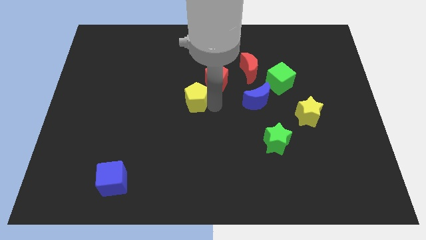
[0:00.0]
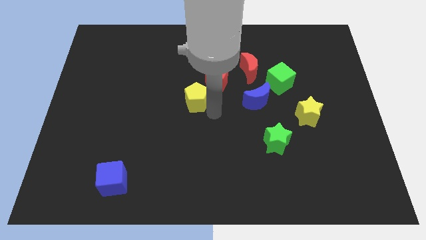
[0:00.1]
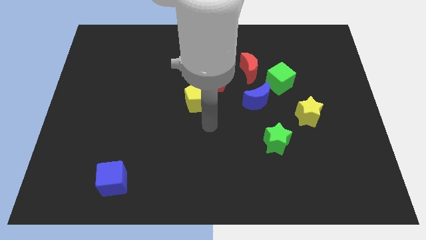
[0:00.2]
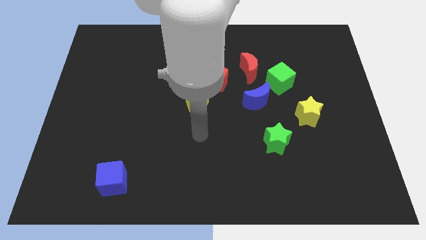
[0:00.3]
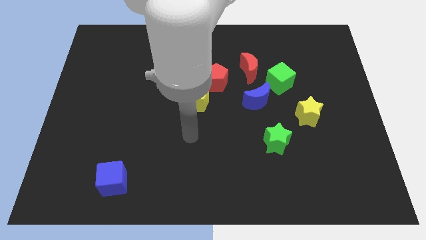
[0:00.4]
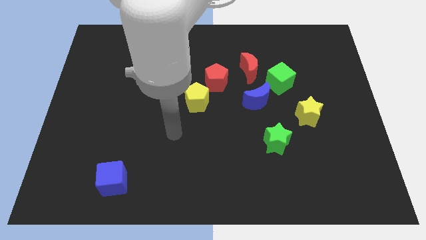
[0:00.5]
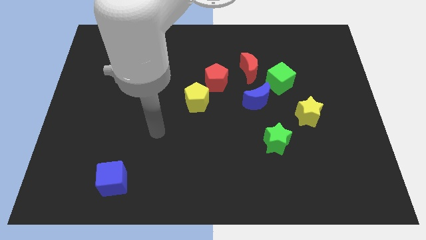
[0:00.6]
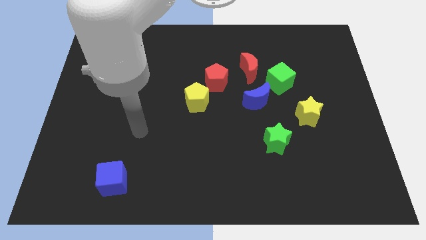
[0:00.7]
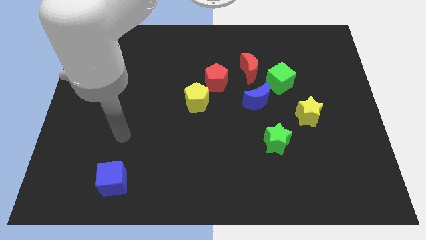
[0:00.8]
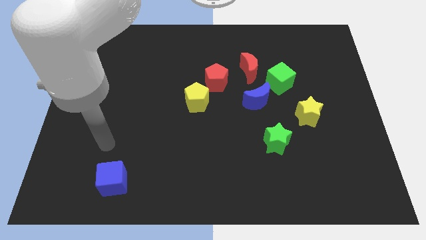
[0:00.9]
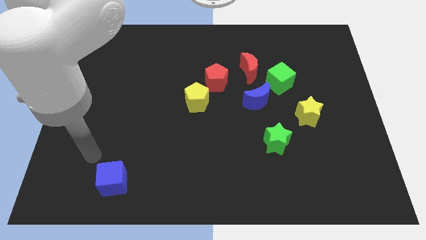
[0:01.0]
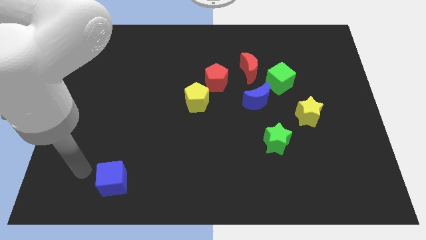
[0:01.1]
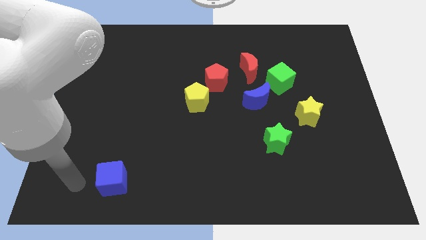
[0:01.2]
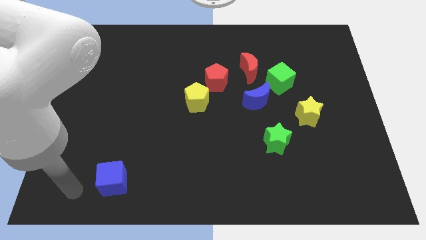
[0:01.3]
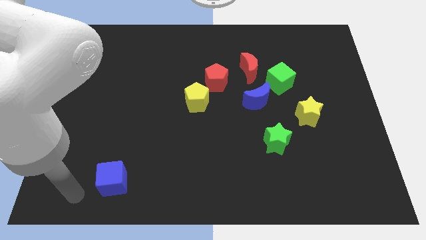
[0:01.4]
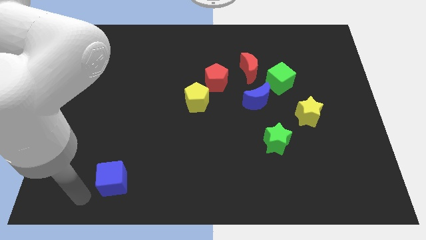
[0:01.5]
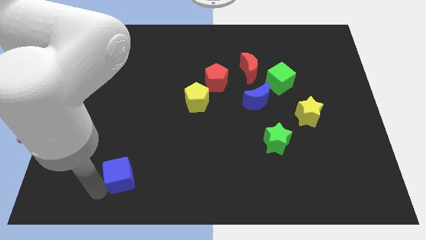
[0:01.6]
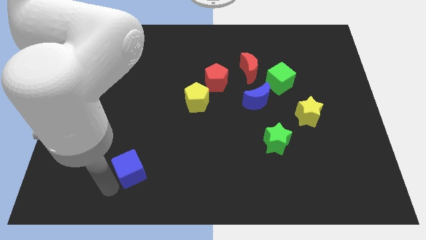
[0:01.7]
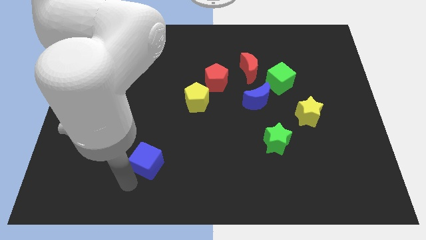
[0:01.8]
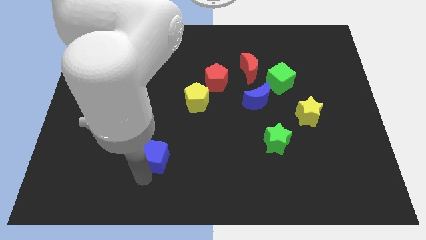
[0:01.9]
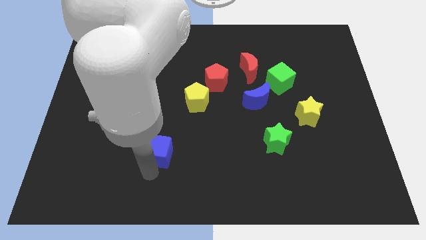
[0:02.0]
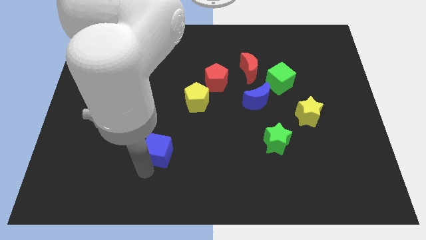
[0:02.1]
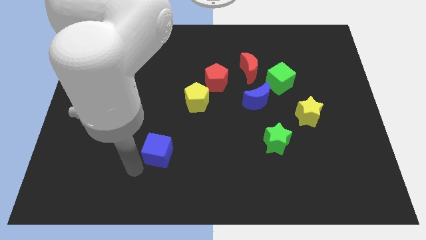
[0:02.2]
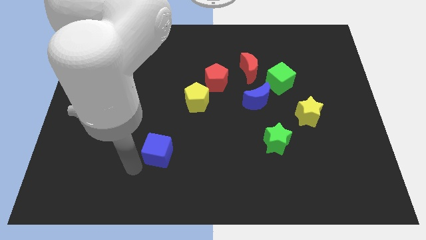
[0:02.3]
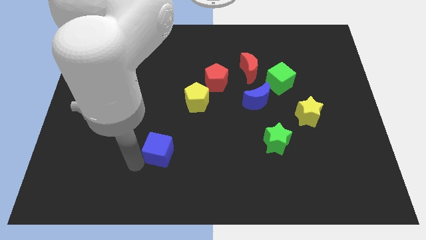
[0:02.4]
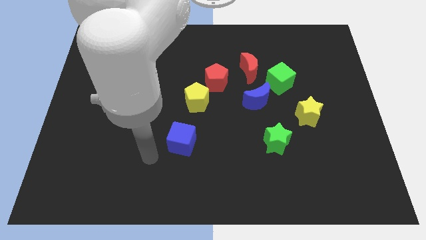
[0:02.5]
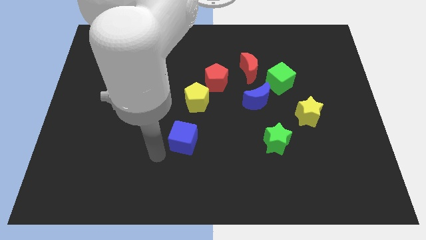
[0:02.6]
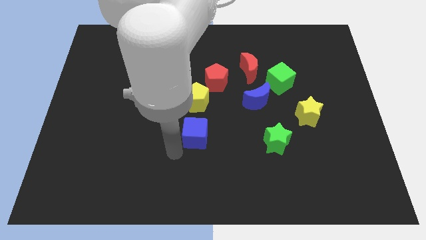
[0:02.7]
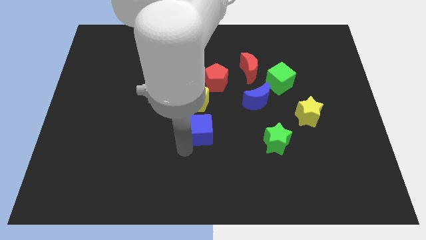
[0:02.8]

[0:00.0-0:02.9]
place the blue cube down to the yellow pentagon

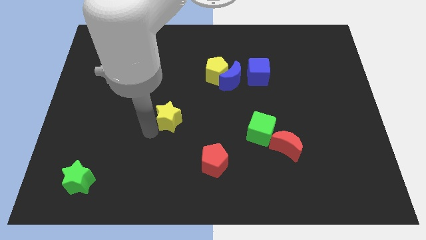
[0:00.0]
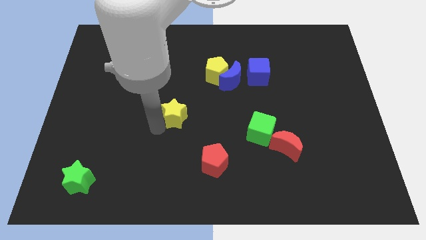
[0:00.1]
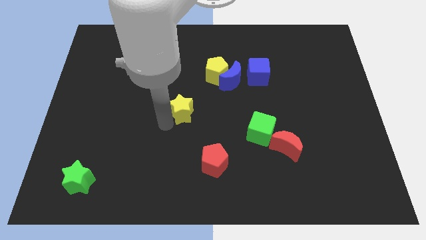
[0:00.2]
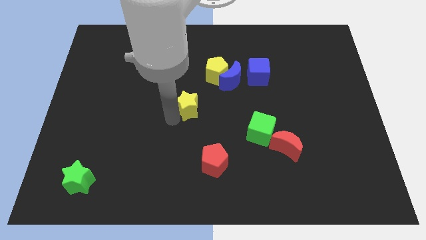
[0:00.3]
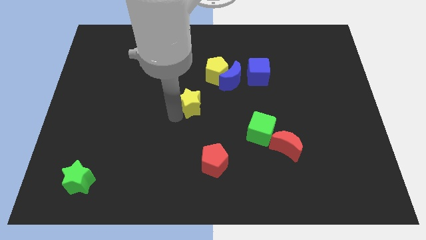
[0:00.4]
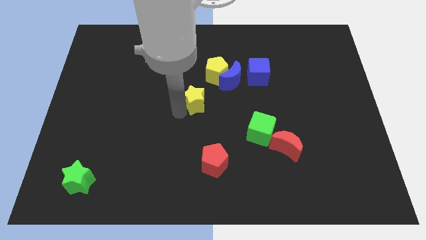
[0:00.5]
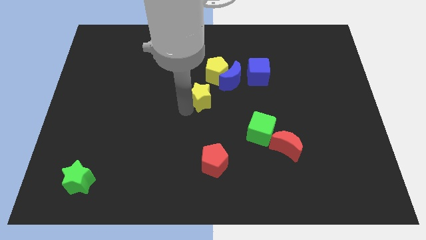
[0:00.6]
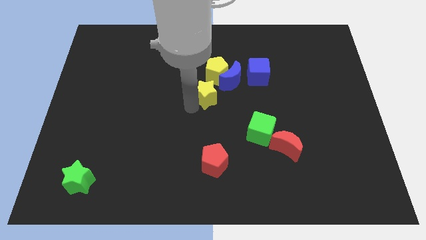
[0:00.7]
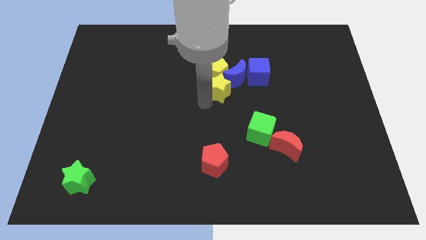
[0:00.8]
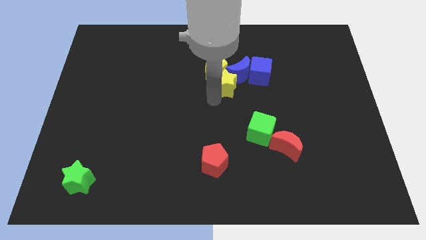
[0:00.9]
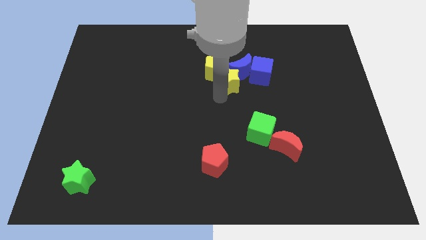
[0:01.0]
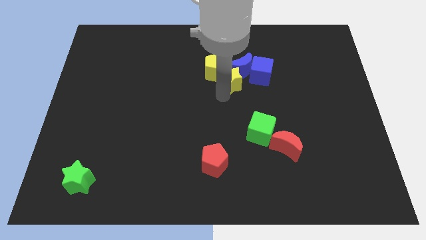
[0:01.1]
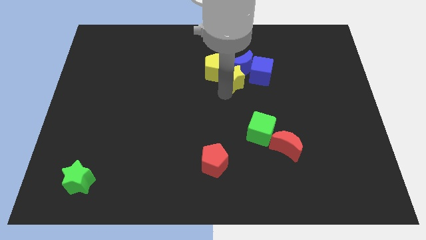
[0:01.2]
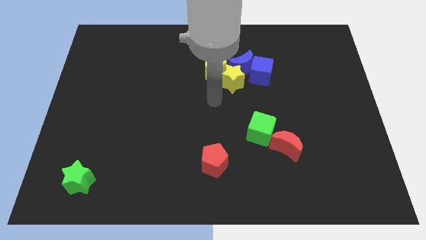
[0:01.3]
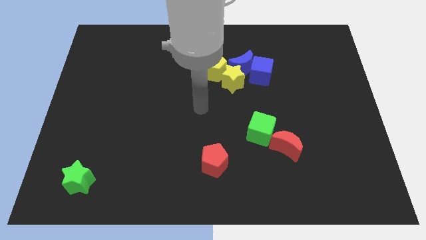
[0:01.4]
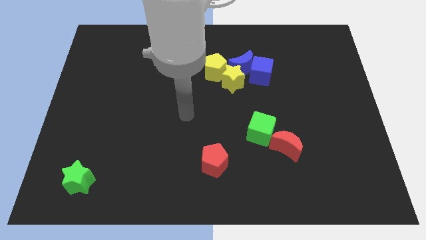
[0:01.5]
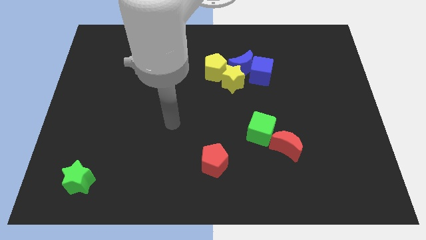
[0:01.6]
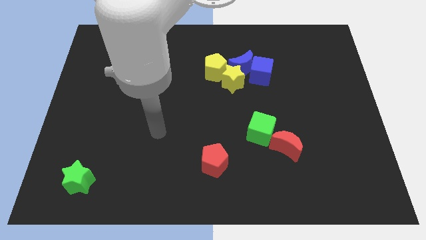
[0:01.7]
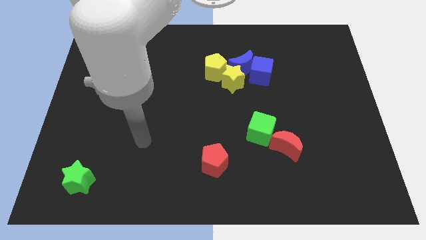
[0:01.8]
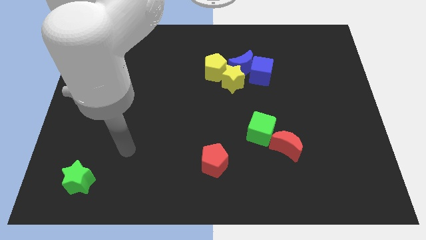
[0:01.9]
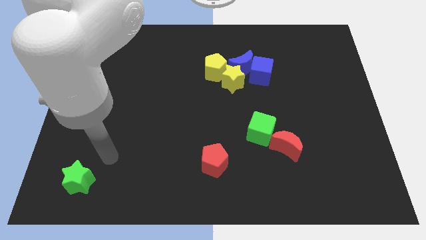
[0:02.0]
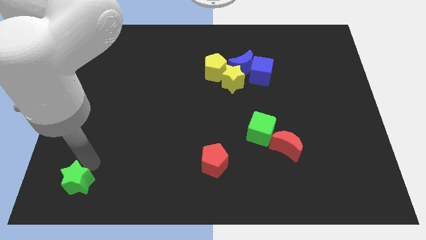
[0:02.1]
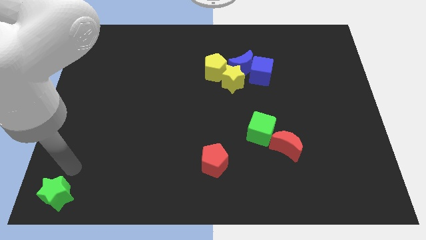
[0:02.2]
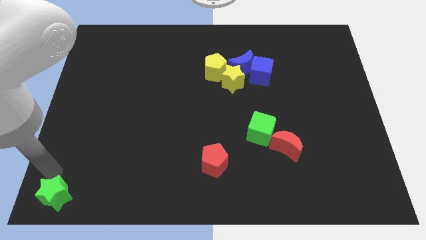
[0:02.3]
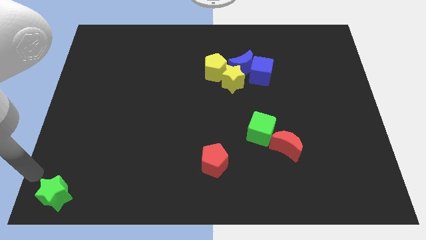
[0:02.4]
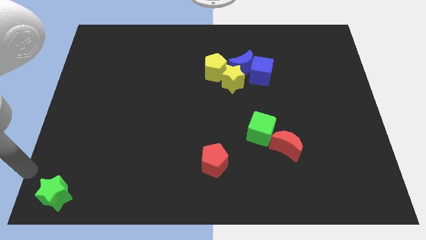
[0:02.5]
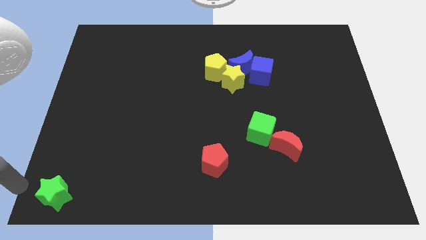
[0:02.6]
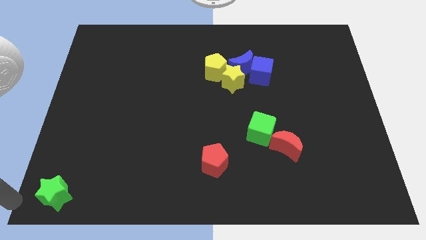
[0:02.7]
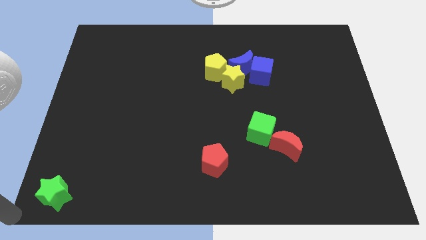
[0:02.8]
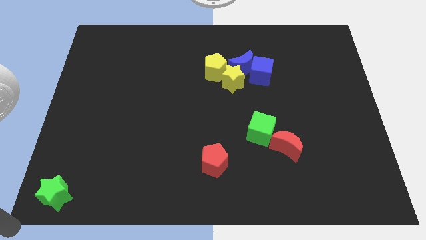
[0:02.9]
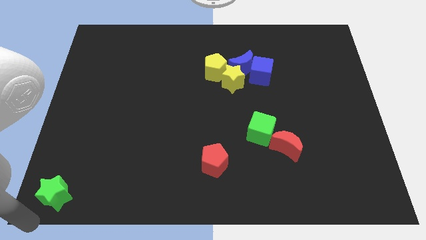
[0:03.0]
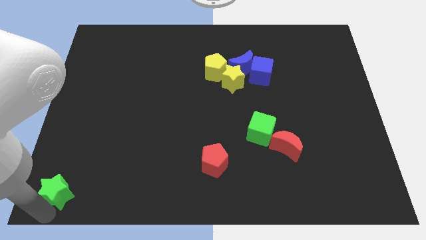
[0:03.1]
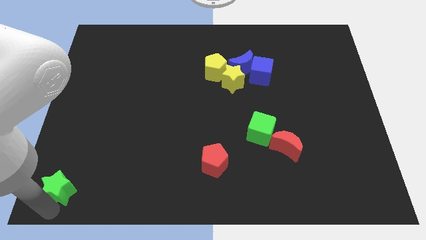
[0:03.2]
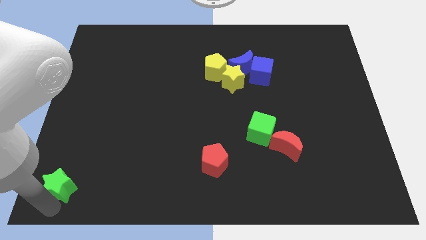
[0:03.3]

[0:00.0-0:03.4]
place your arm below green star

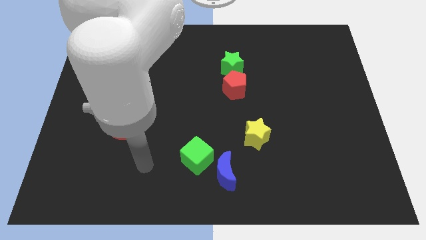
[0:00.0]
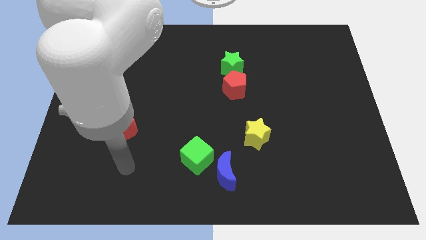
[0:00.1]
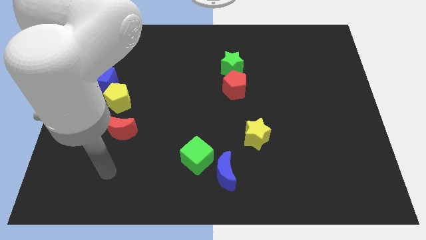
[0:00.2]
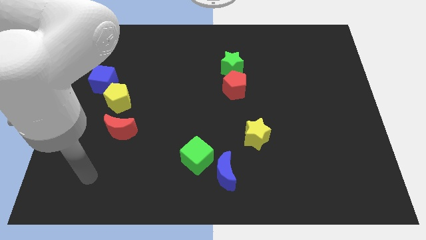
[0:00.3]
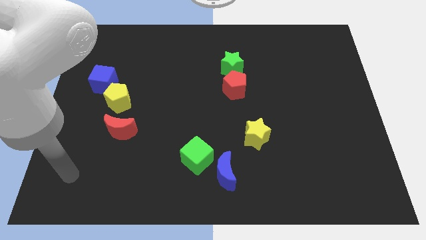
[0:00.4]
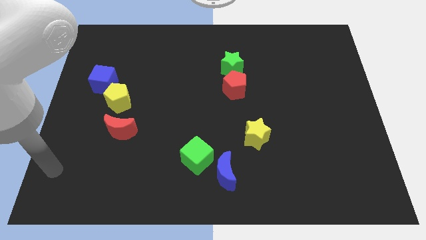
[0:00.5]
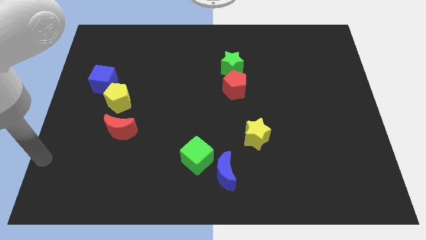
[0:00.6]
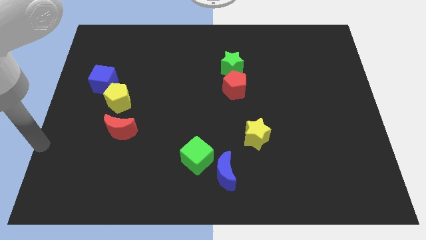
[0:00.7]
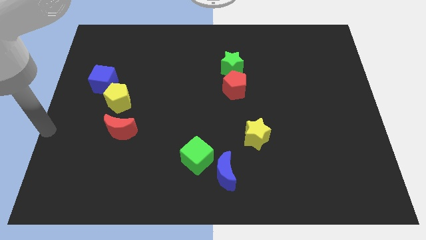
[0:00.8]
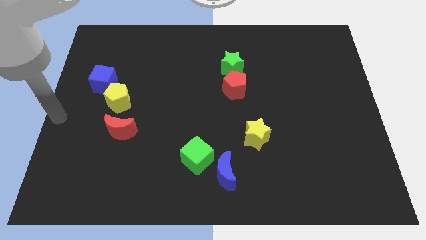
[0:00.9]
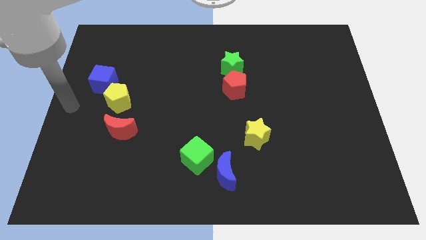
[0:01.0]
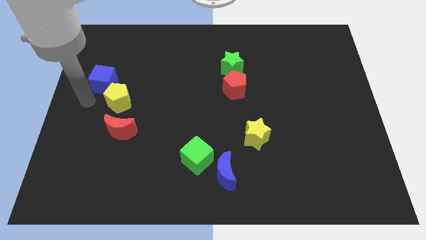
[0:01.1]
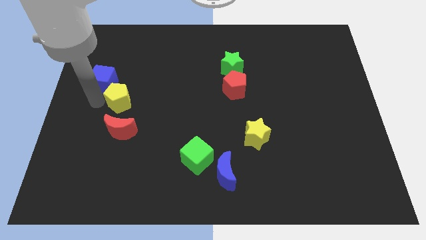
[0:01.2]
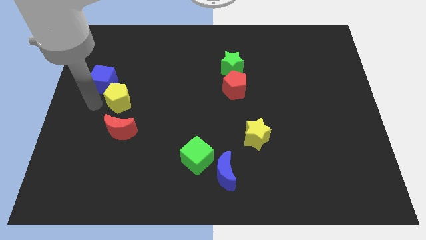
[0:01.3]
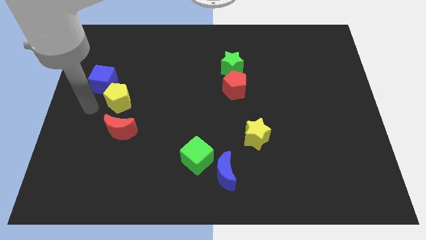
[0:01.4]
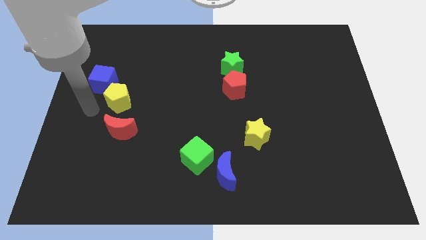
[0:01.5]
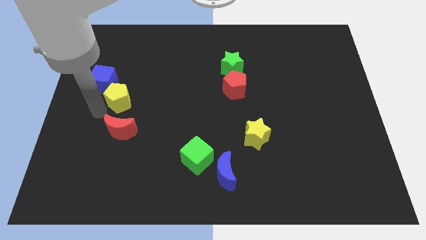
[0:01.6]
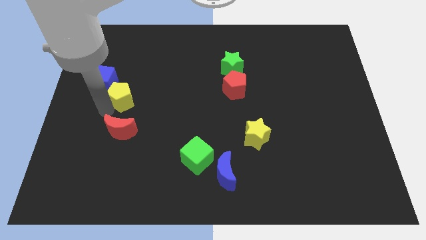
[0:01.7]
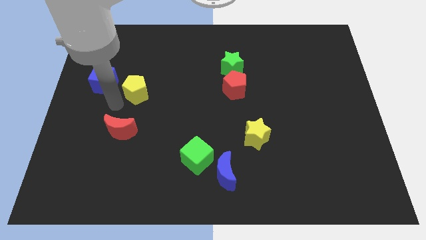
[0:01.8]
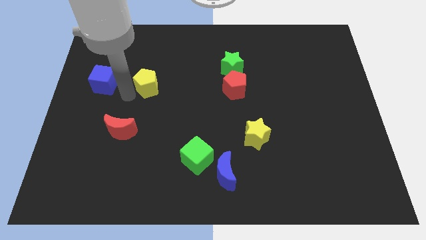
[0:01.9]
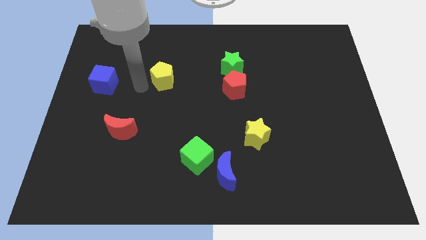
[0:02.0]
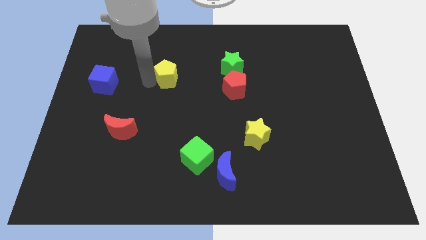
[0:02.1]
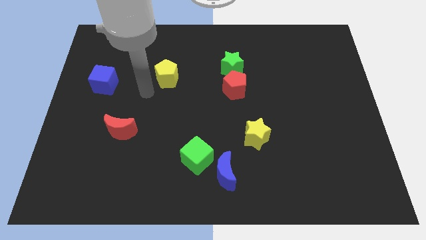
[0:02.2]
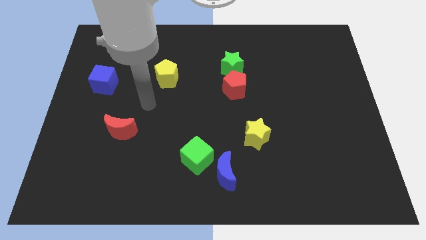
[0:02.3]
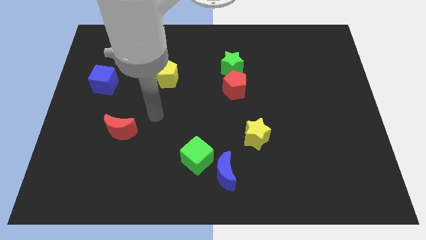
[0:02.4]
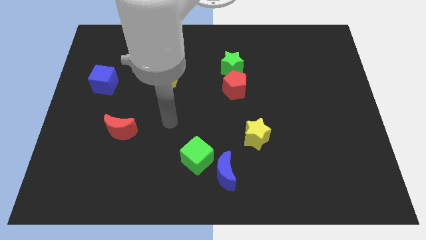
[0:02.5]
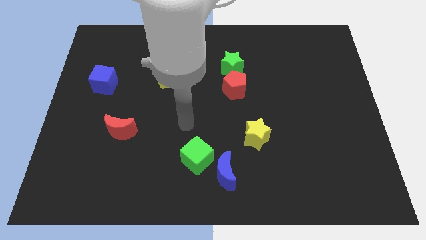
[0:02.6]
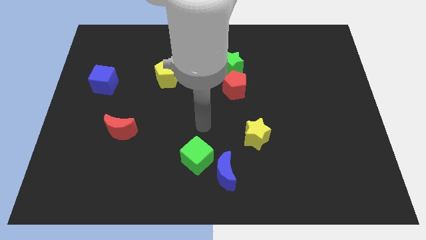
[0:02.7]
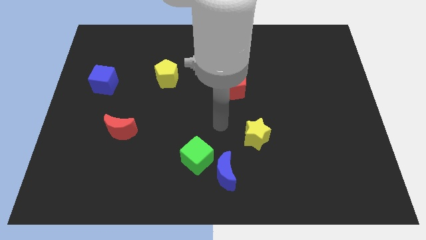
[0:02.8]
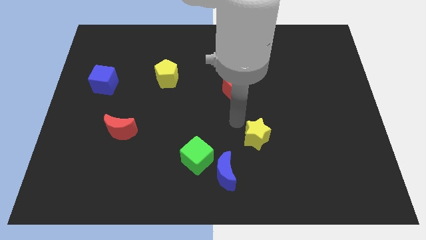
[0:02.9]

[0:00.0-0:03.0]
separate yellow pentagon from the red moon
